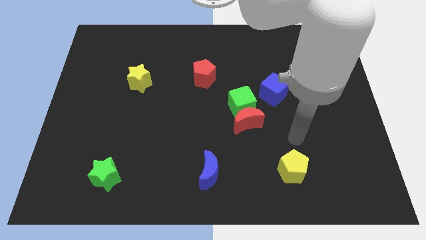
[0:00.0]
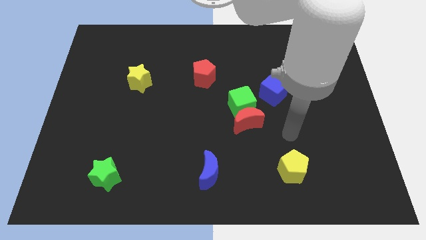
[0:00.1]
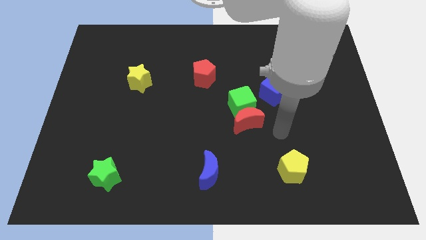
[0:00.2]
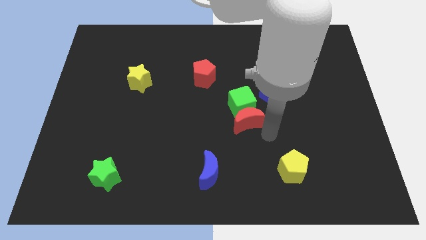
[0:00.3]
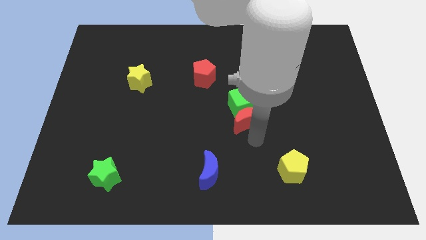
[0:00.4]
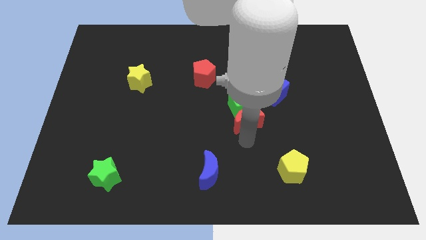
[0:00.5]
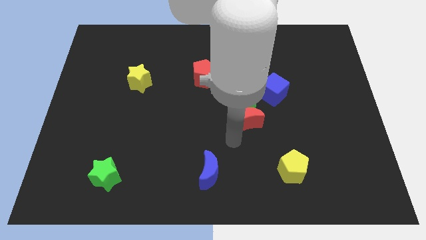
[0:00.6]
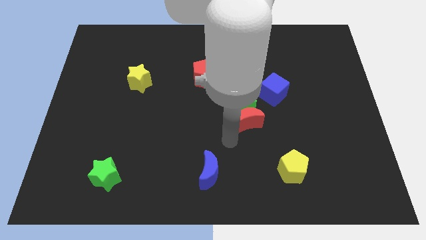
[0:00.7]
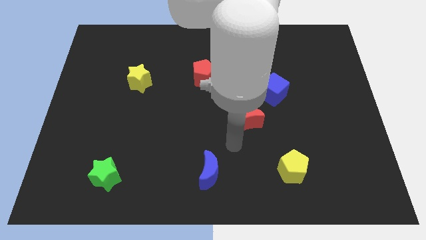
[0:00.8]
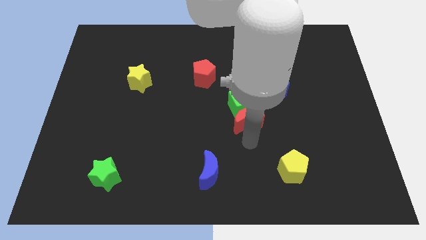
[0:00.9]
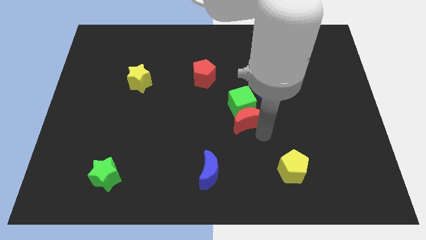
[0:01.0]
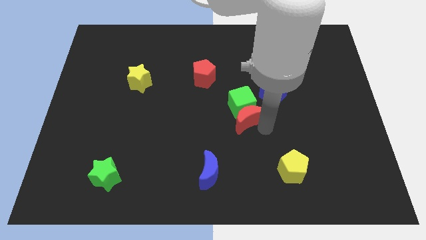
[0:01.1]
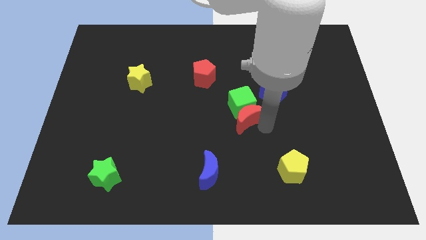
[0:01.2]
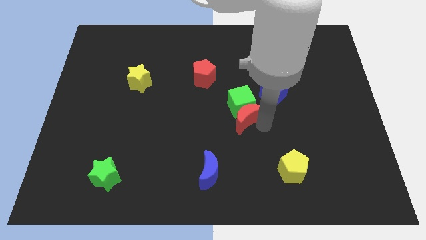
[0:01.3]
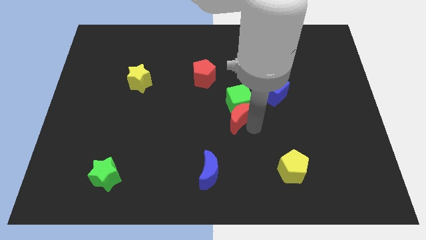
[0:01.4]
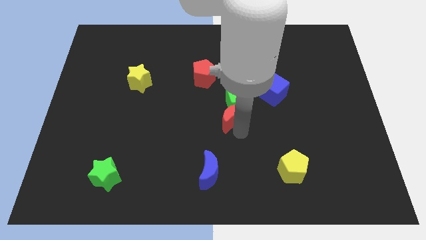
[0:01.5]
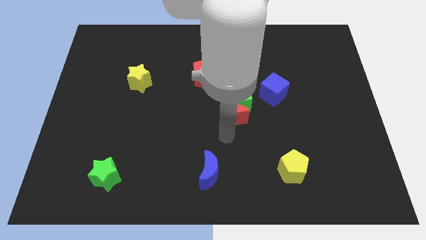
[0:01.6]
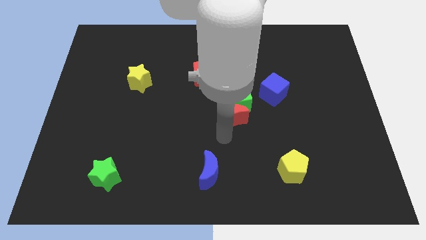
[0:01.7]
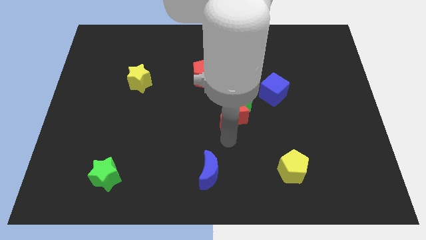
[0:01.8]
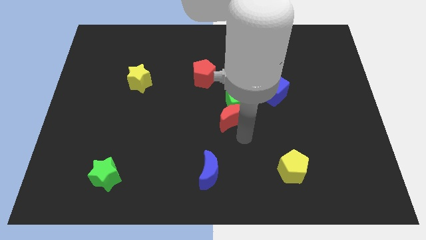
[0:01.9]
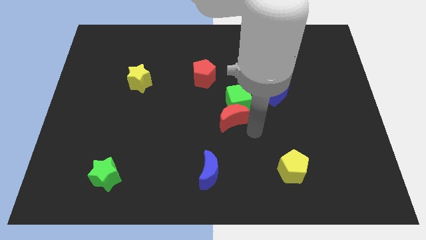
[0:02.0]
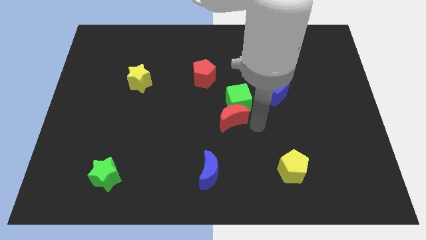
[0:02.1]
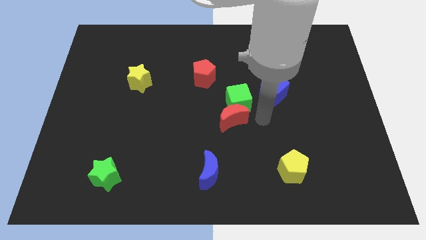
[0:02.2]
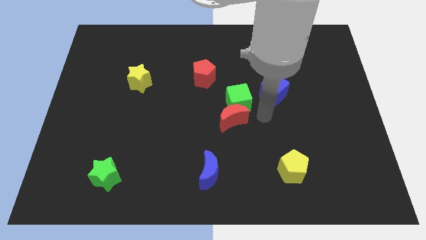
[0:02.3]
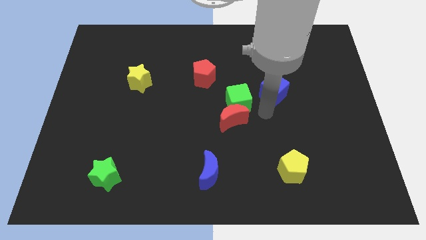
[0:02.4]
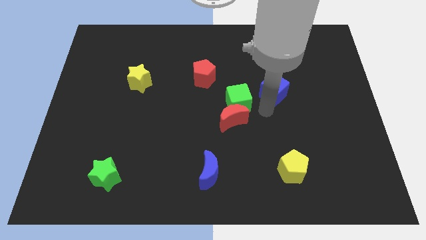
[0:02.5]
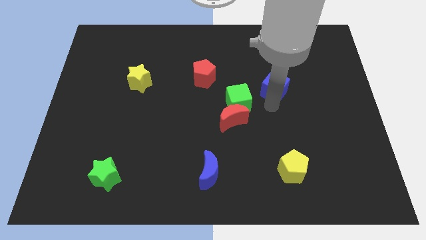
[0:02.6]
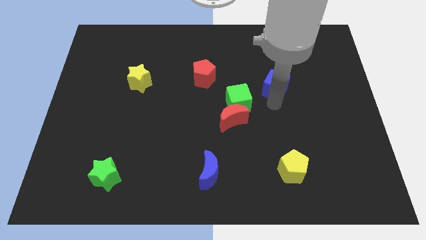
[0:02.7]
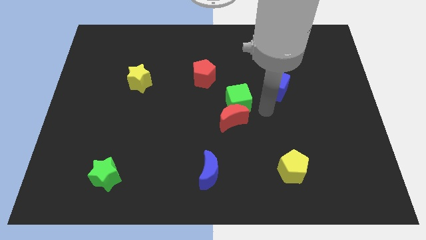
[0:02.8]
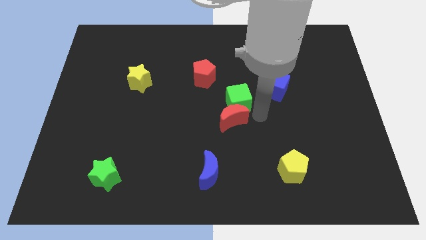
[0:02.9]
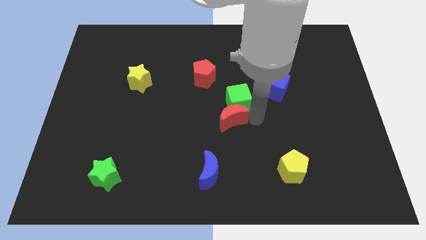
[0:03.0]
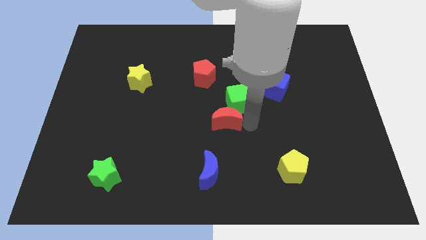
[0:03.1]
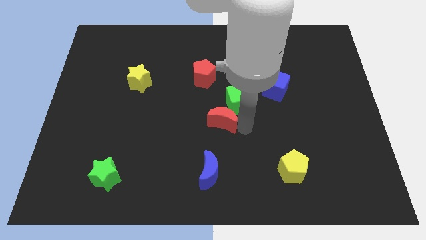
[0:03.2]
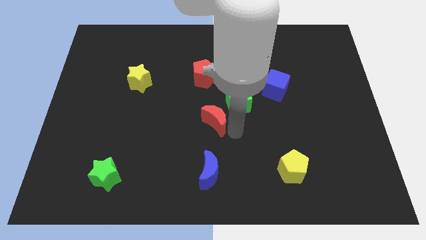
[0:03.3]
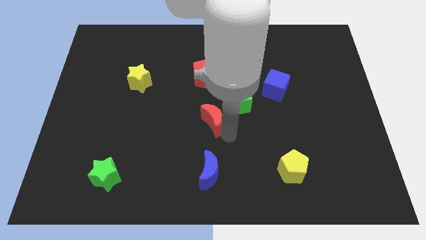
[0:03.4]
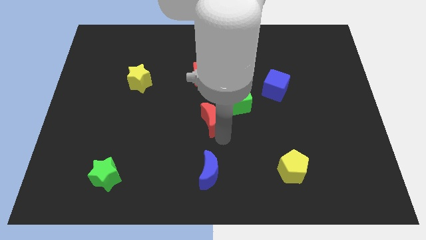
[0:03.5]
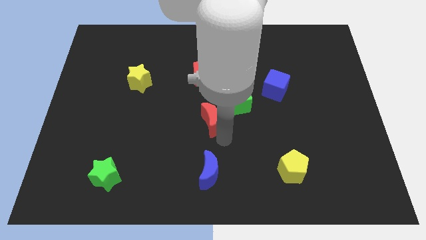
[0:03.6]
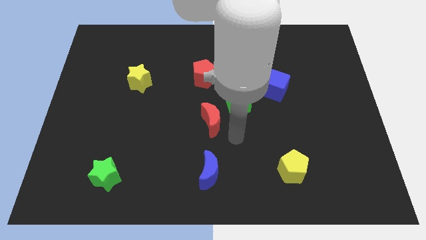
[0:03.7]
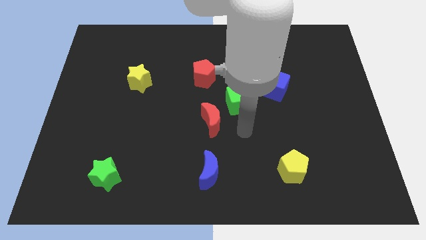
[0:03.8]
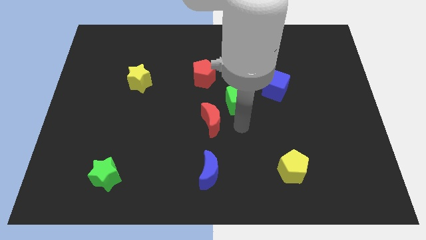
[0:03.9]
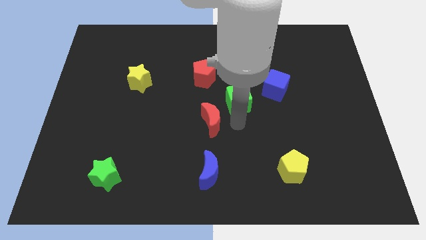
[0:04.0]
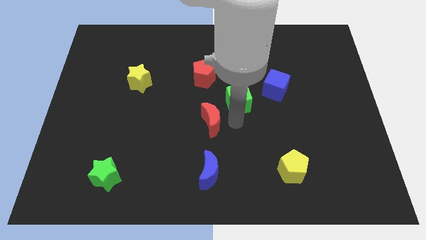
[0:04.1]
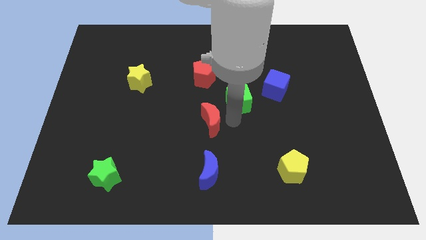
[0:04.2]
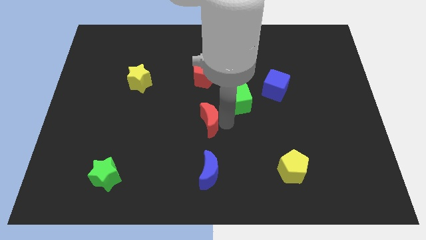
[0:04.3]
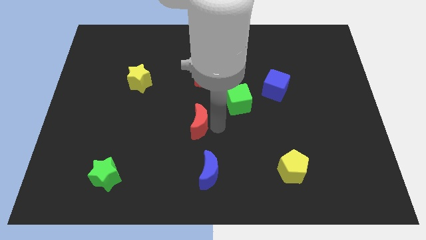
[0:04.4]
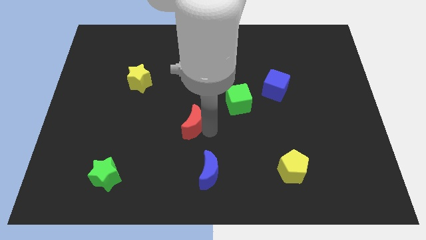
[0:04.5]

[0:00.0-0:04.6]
place the red moon at the top of the blue moon

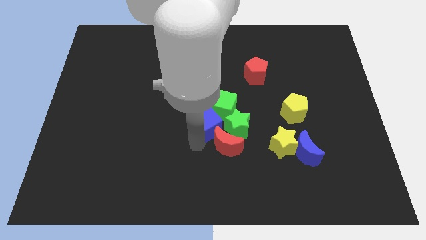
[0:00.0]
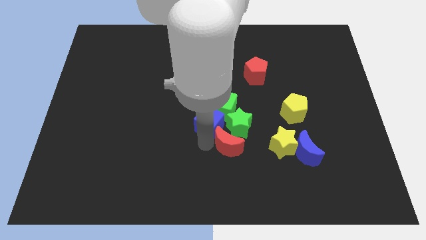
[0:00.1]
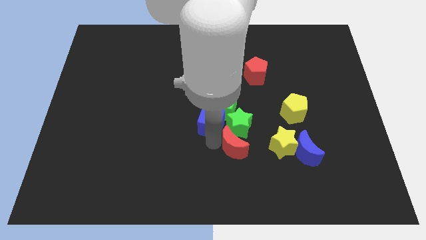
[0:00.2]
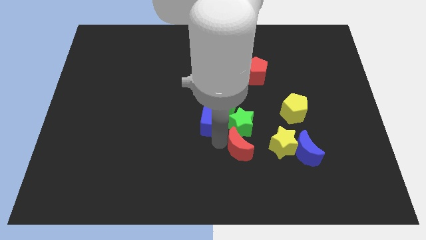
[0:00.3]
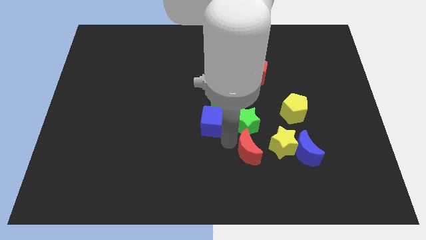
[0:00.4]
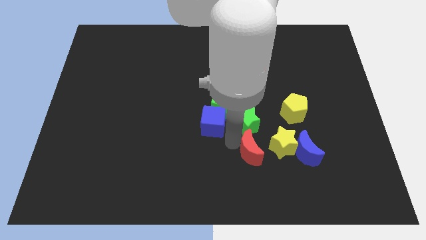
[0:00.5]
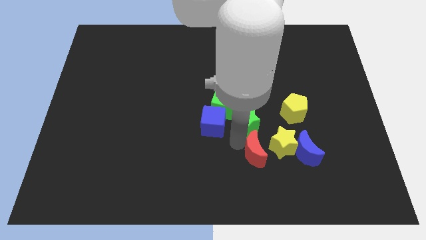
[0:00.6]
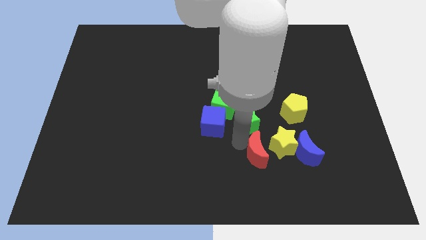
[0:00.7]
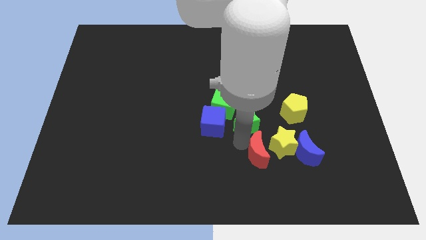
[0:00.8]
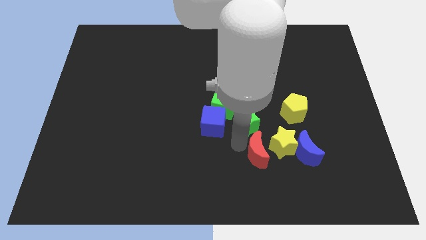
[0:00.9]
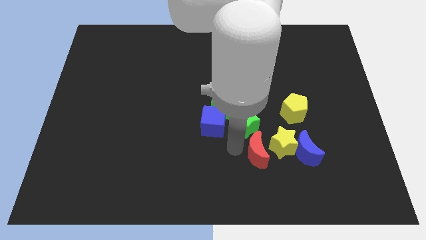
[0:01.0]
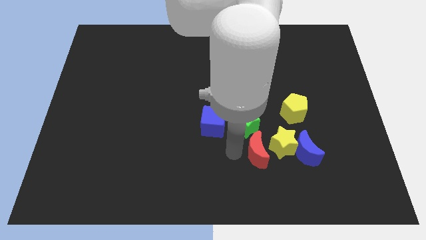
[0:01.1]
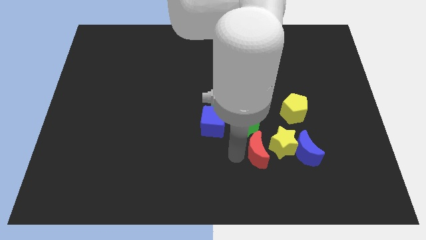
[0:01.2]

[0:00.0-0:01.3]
move red moon towards yellow pentagon

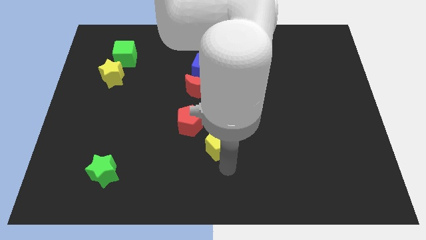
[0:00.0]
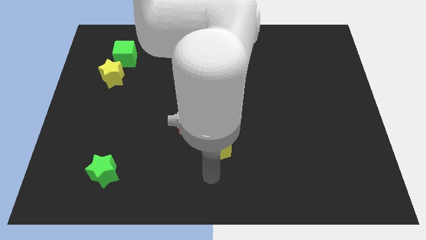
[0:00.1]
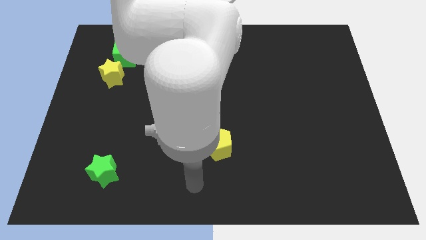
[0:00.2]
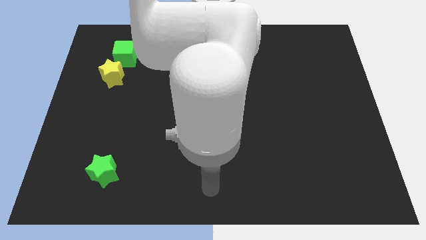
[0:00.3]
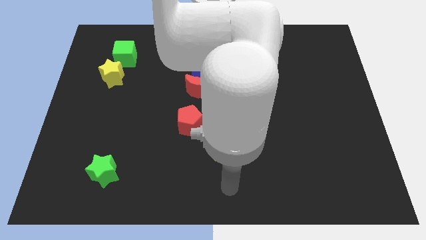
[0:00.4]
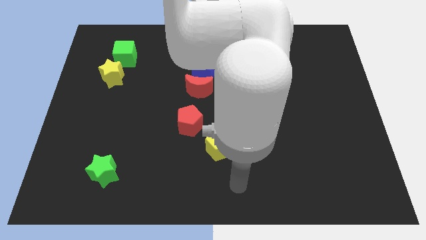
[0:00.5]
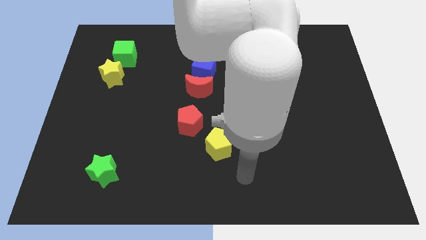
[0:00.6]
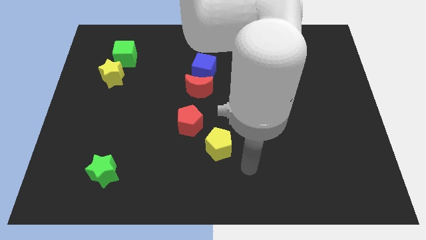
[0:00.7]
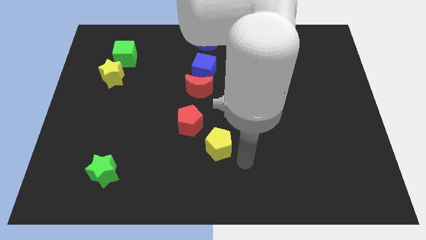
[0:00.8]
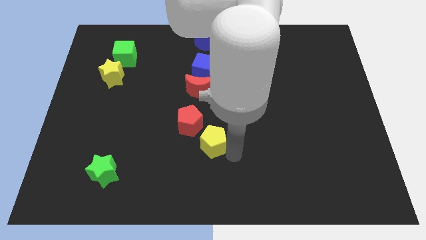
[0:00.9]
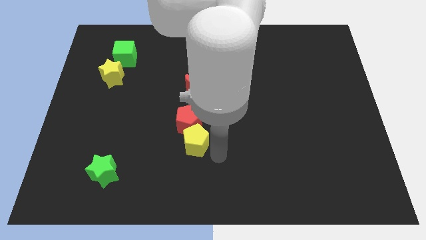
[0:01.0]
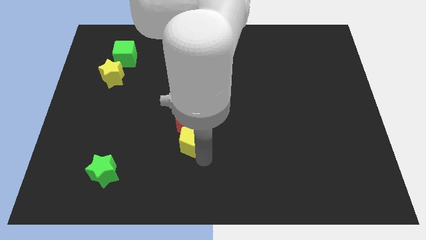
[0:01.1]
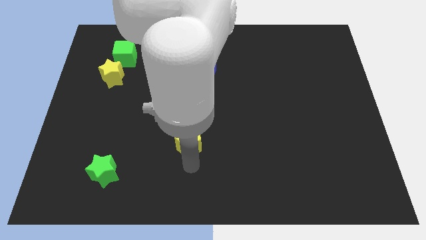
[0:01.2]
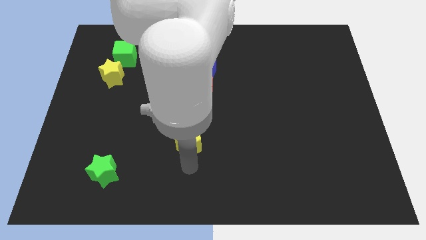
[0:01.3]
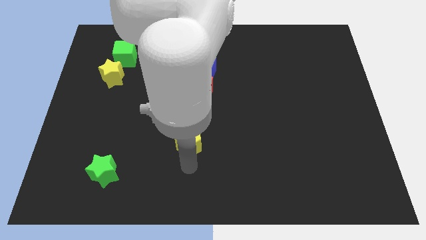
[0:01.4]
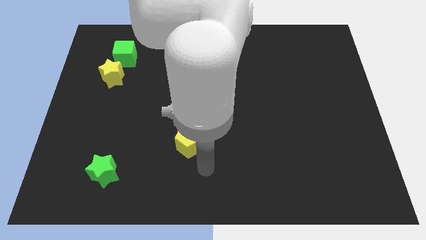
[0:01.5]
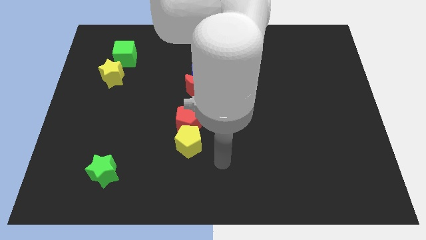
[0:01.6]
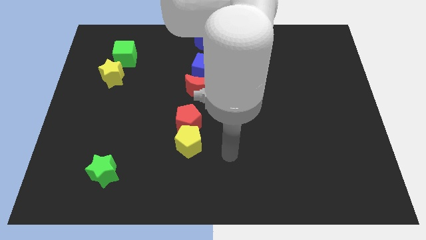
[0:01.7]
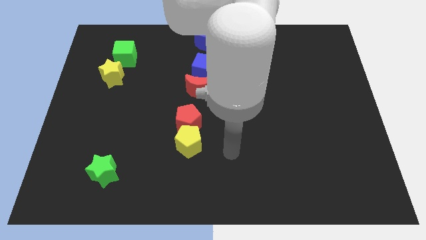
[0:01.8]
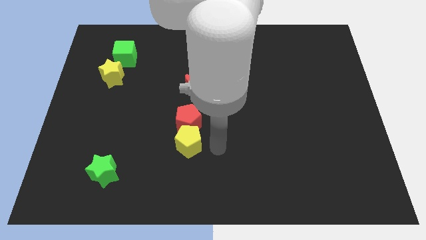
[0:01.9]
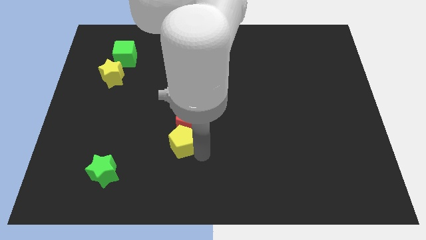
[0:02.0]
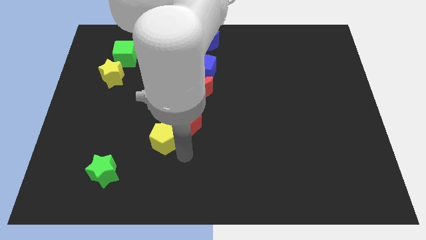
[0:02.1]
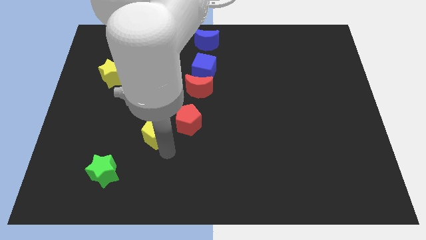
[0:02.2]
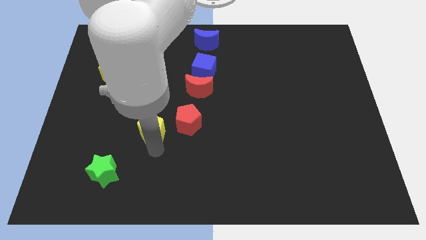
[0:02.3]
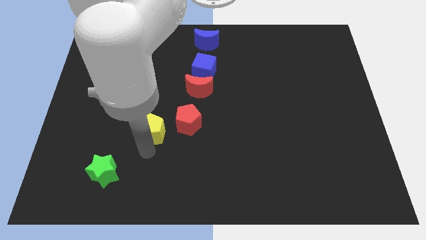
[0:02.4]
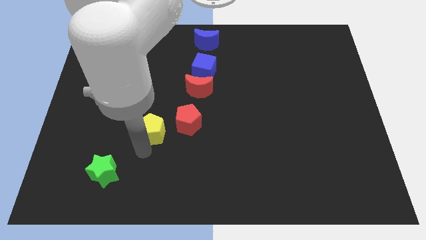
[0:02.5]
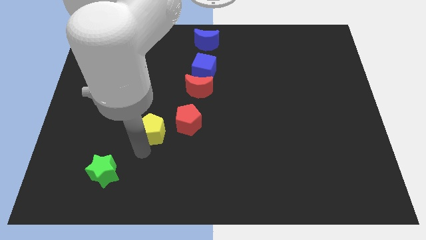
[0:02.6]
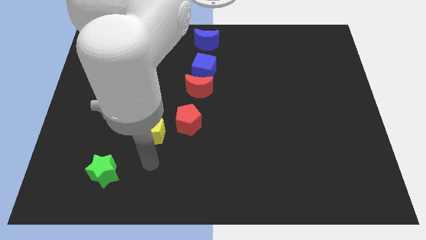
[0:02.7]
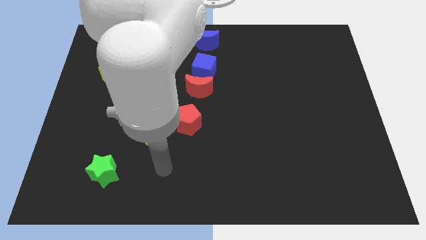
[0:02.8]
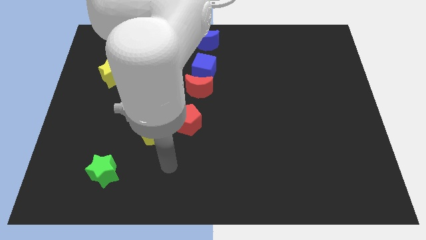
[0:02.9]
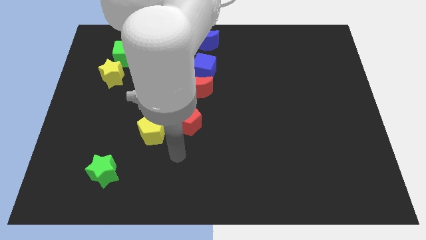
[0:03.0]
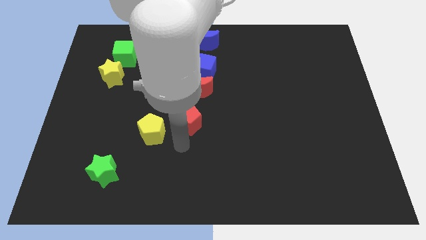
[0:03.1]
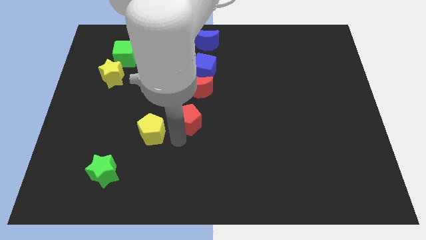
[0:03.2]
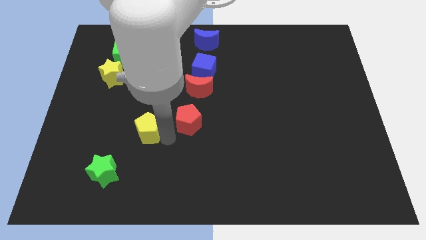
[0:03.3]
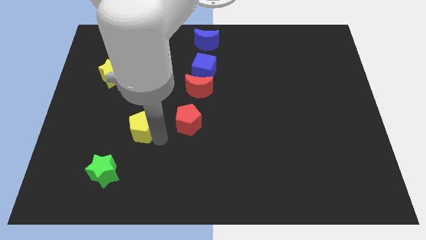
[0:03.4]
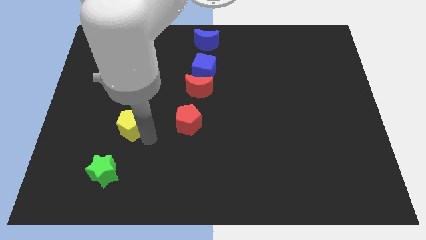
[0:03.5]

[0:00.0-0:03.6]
push the yellow pentagon left to the red pentagon
